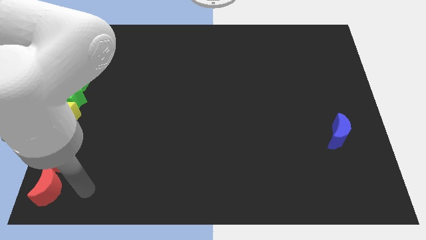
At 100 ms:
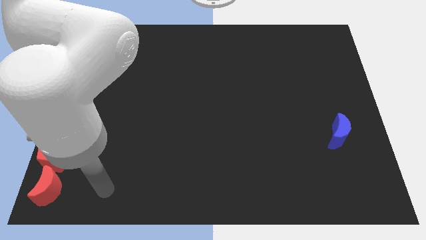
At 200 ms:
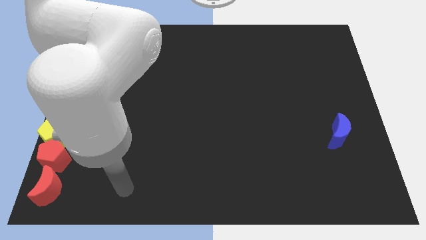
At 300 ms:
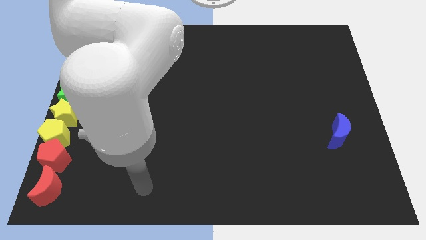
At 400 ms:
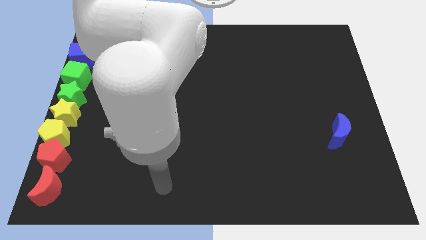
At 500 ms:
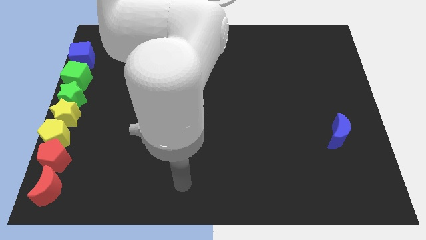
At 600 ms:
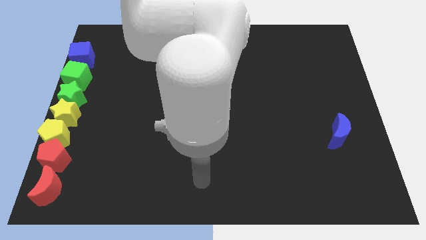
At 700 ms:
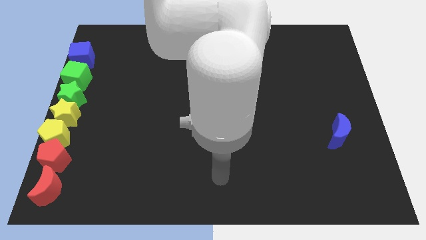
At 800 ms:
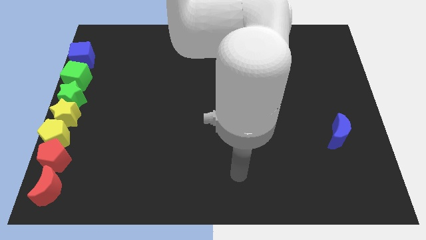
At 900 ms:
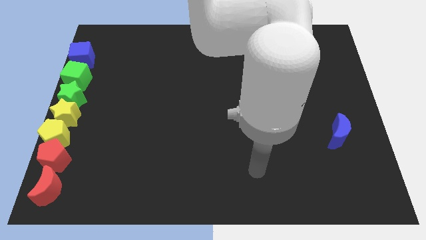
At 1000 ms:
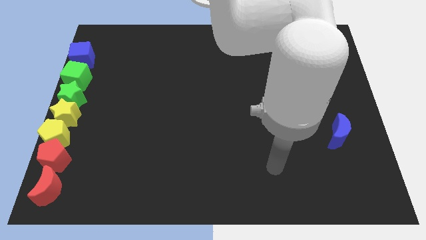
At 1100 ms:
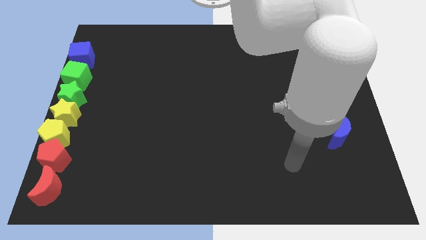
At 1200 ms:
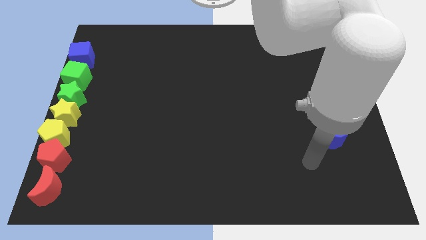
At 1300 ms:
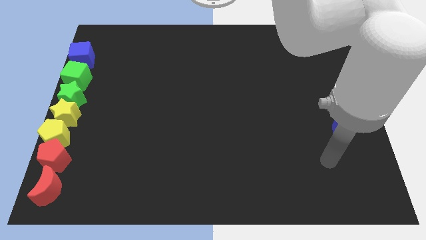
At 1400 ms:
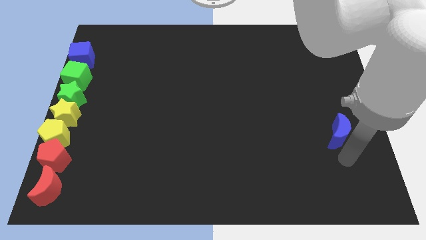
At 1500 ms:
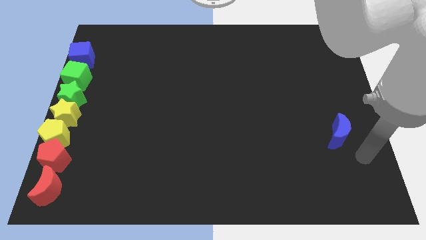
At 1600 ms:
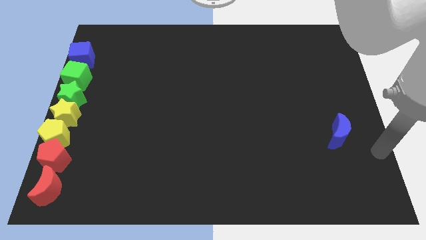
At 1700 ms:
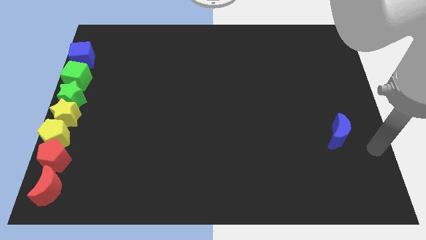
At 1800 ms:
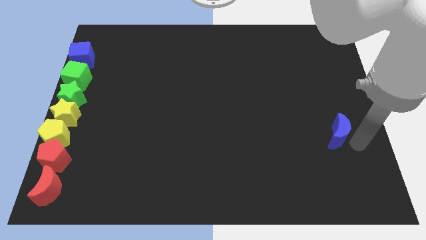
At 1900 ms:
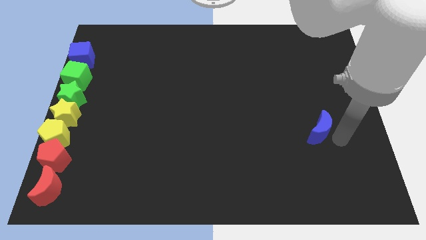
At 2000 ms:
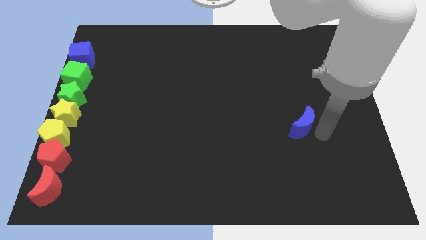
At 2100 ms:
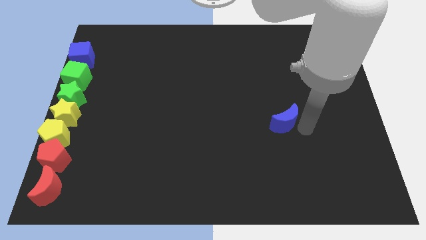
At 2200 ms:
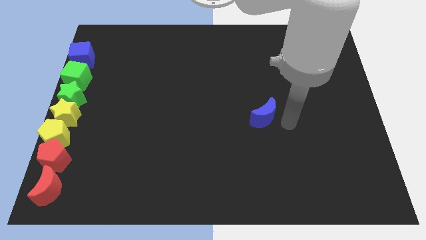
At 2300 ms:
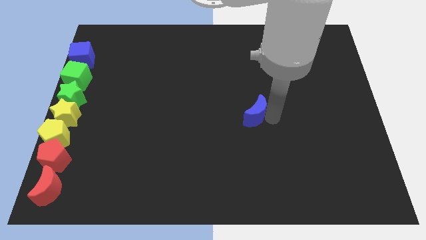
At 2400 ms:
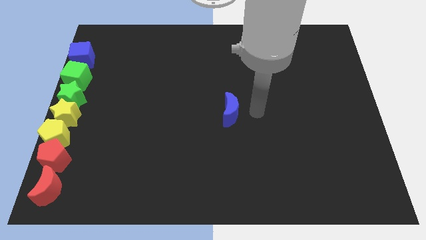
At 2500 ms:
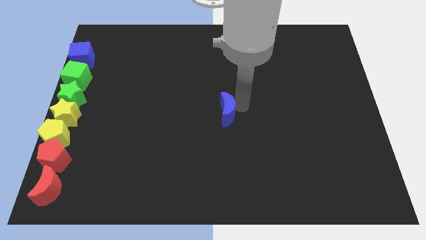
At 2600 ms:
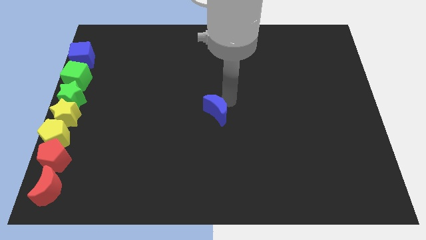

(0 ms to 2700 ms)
move blue cube to the centre of the board

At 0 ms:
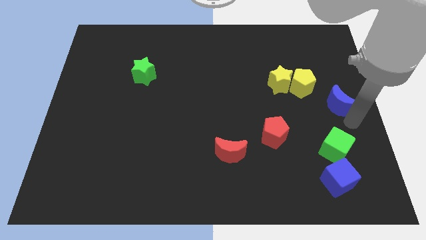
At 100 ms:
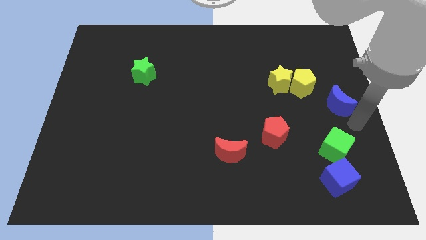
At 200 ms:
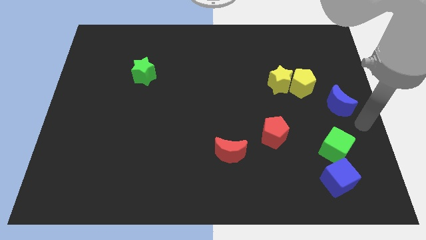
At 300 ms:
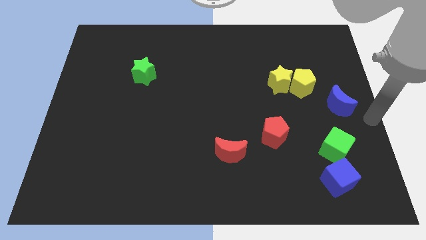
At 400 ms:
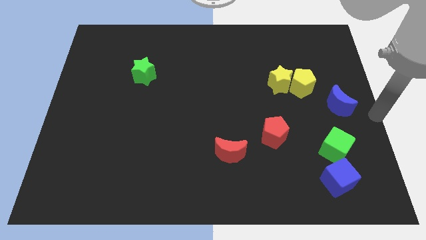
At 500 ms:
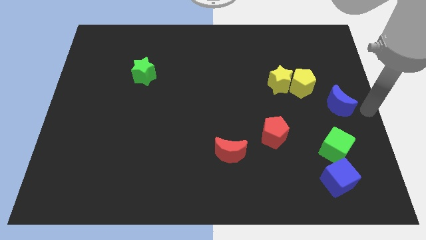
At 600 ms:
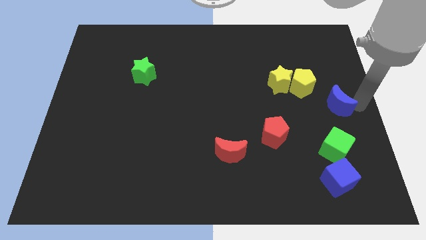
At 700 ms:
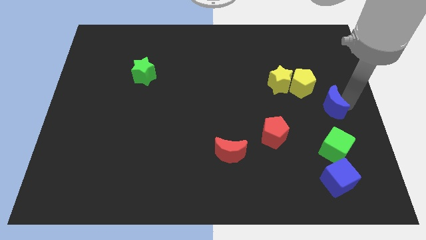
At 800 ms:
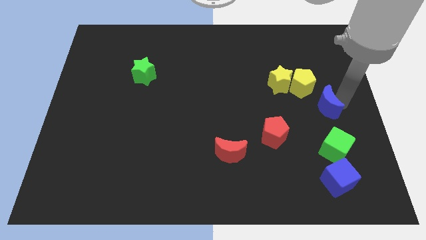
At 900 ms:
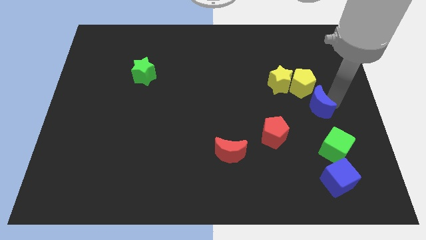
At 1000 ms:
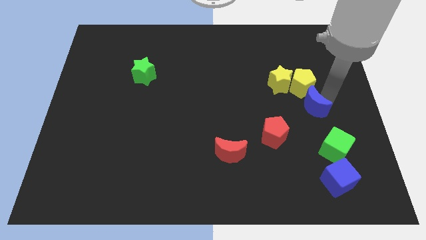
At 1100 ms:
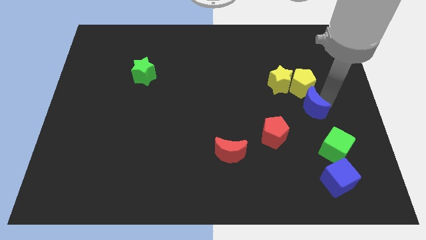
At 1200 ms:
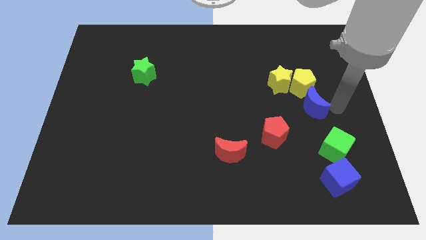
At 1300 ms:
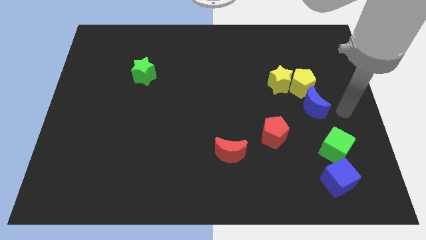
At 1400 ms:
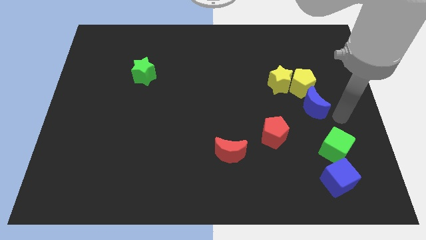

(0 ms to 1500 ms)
move the blue crescent towards the yellow pentagon

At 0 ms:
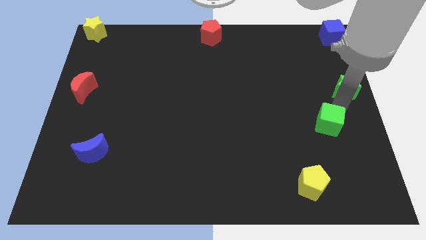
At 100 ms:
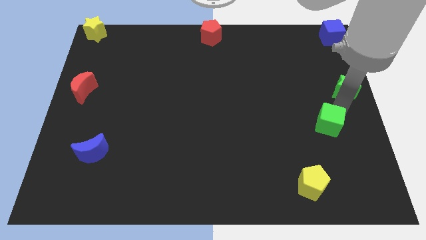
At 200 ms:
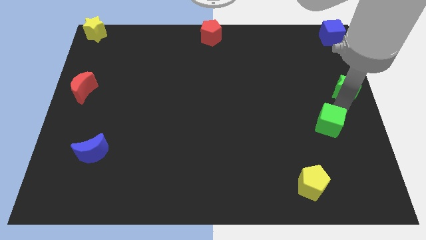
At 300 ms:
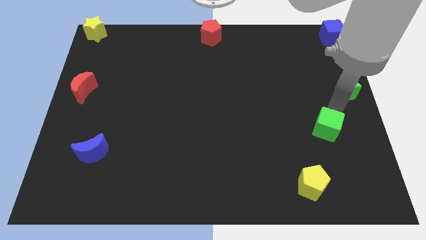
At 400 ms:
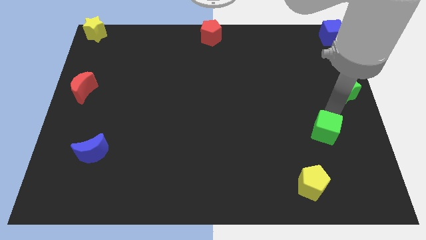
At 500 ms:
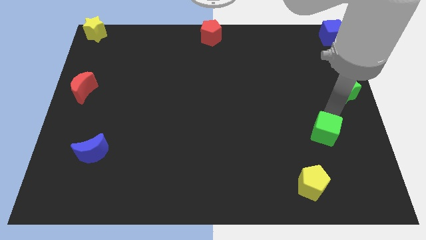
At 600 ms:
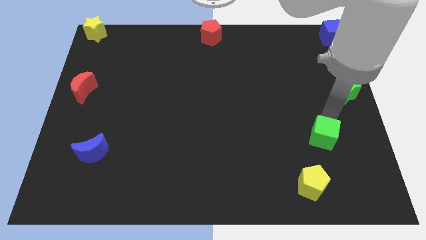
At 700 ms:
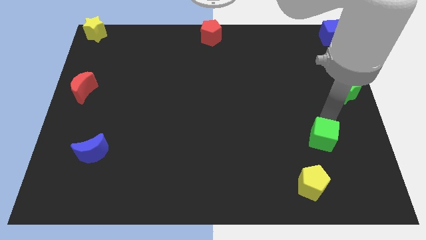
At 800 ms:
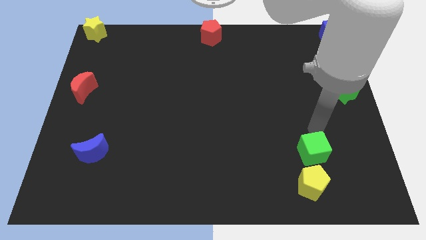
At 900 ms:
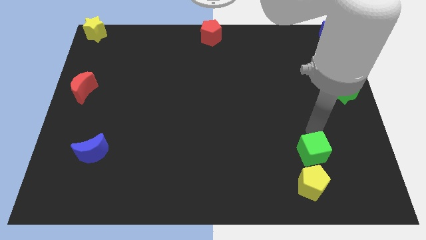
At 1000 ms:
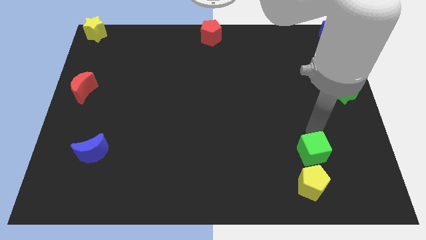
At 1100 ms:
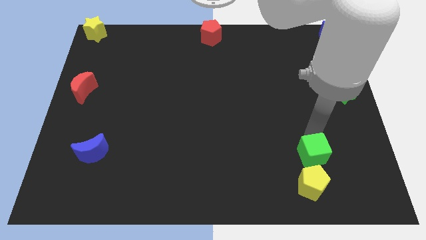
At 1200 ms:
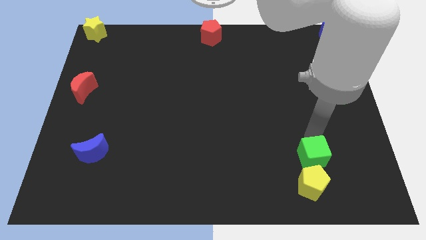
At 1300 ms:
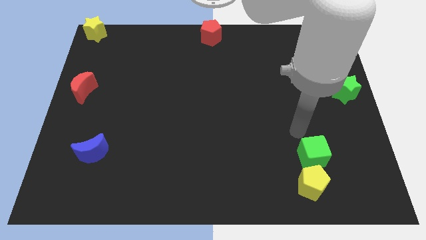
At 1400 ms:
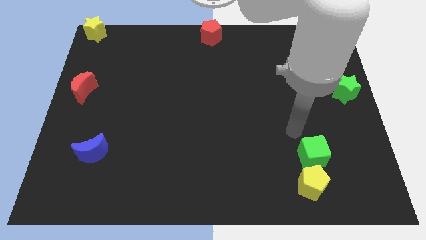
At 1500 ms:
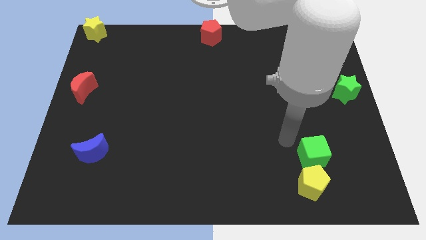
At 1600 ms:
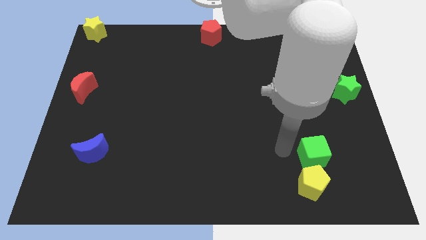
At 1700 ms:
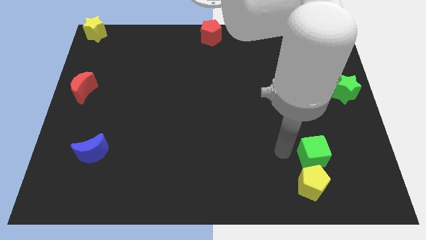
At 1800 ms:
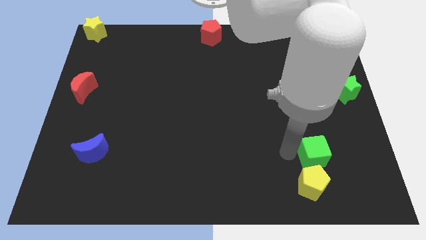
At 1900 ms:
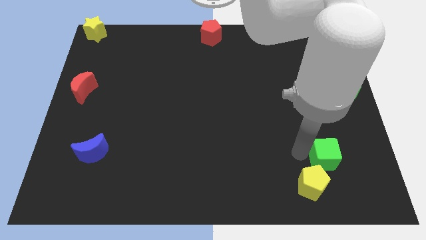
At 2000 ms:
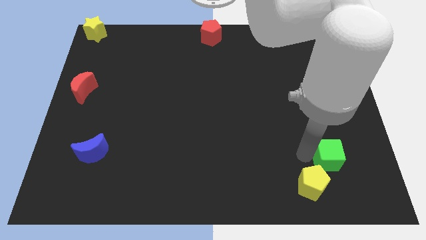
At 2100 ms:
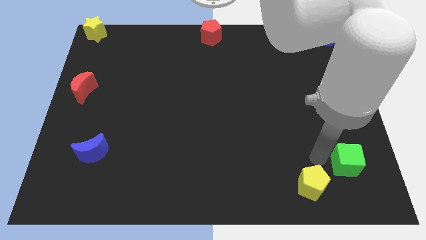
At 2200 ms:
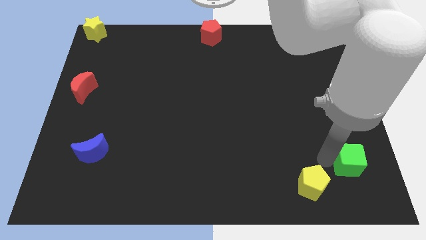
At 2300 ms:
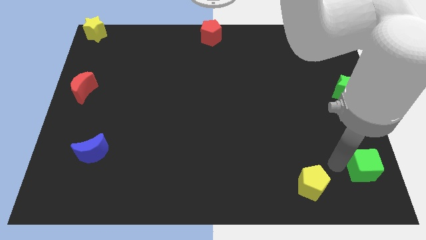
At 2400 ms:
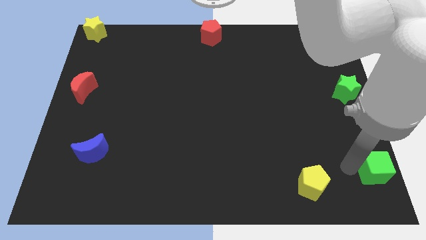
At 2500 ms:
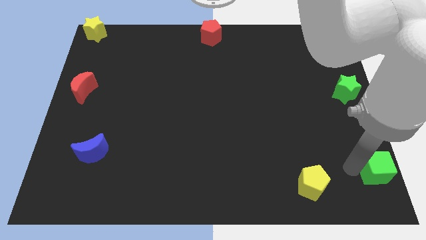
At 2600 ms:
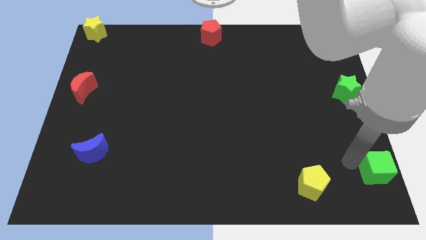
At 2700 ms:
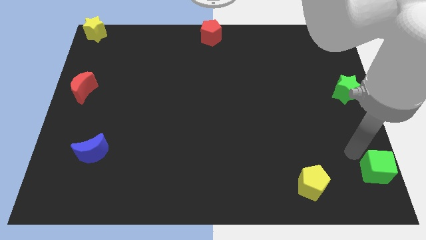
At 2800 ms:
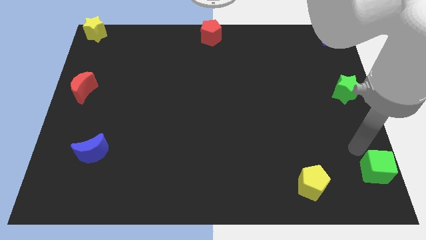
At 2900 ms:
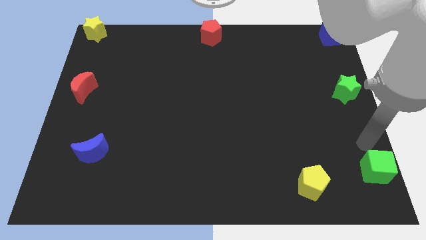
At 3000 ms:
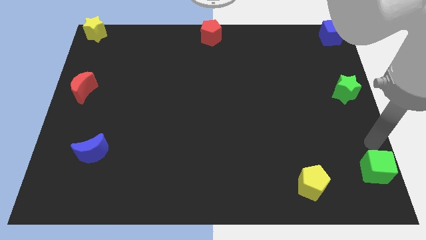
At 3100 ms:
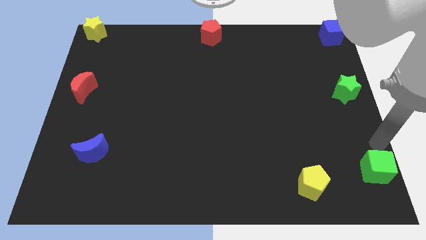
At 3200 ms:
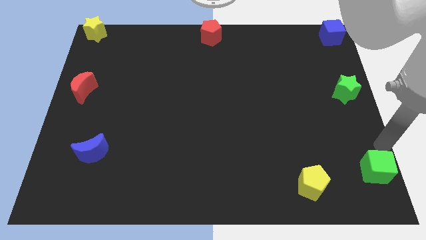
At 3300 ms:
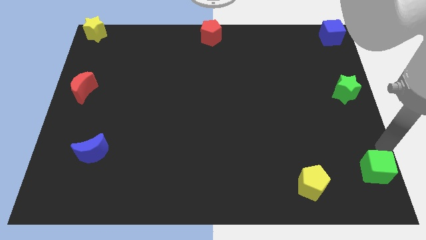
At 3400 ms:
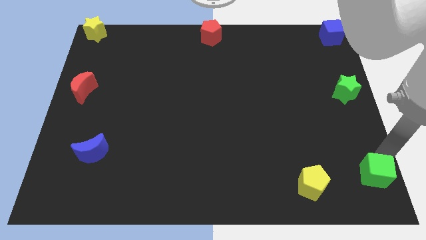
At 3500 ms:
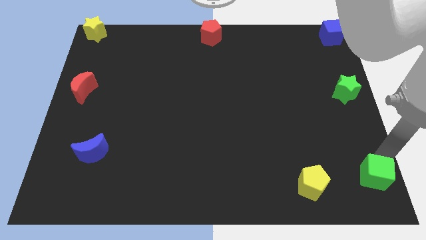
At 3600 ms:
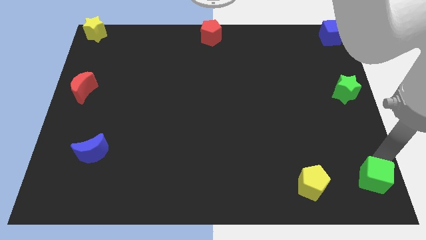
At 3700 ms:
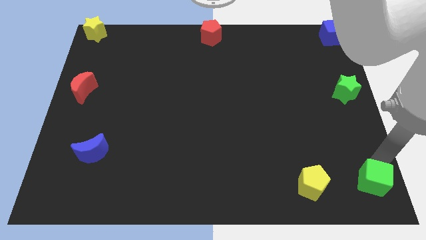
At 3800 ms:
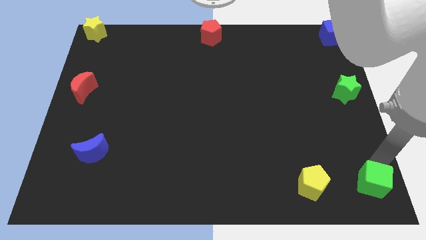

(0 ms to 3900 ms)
push the green cube horizontally to the right side of the yellow pentagon

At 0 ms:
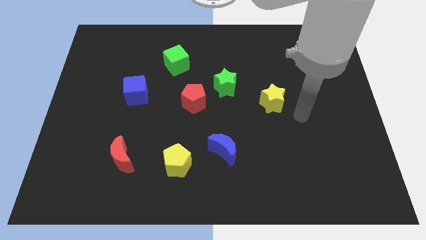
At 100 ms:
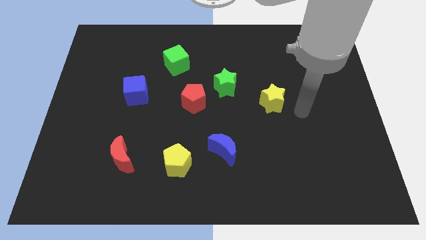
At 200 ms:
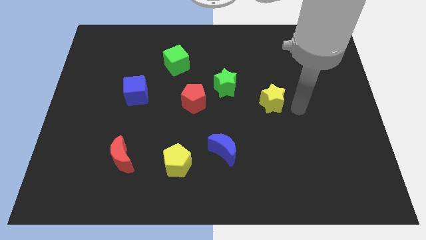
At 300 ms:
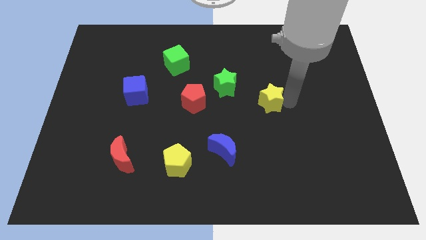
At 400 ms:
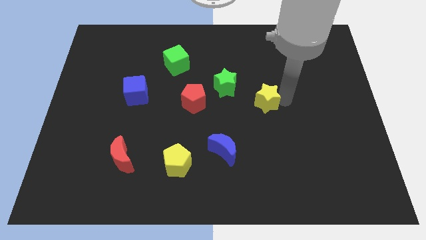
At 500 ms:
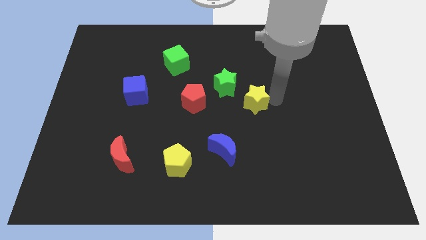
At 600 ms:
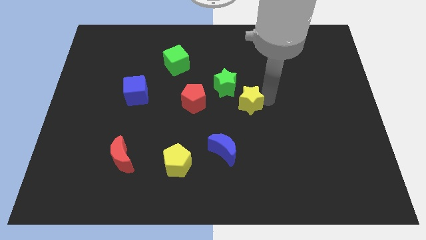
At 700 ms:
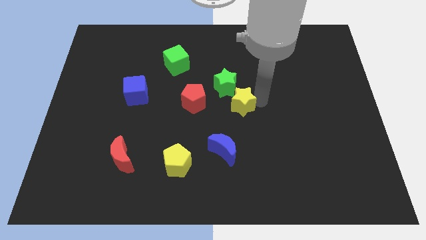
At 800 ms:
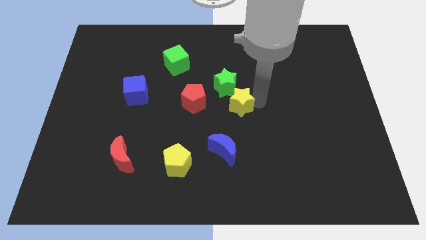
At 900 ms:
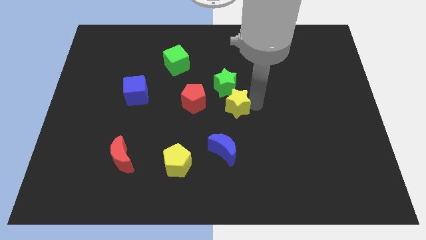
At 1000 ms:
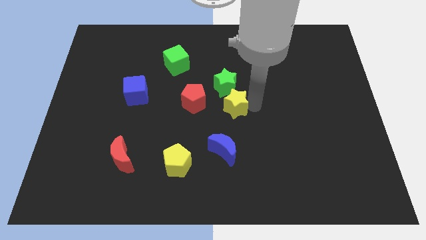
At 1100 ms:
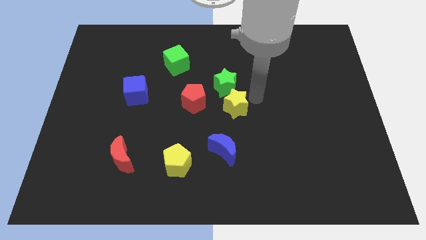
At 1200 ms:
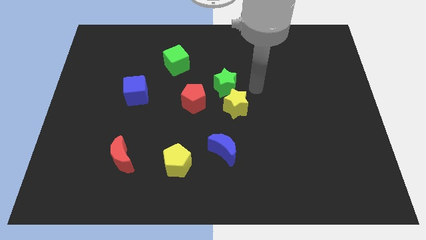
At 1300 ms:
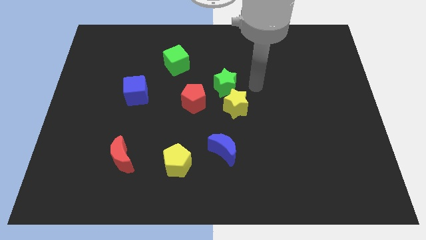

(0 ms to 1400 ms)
move the yellow star to the bottom side of the green star
